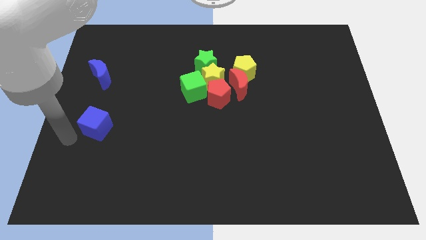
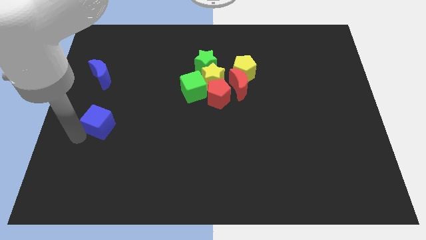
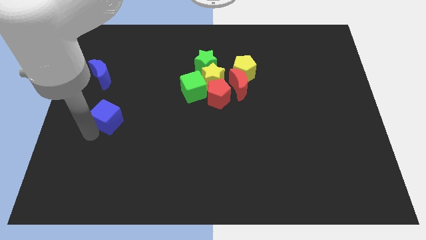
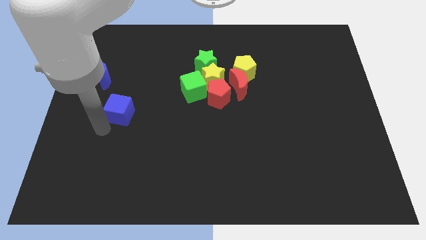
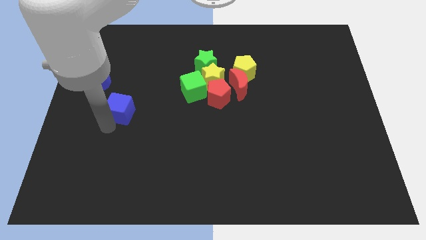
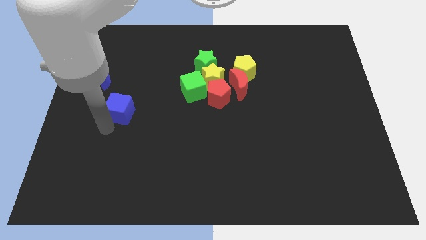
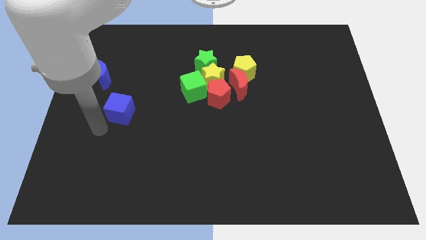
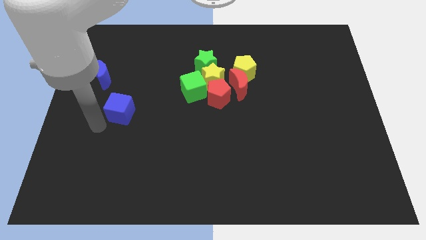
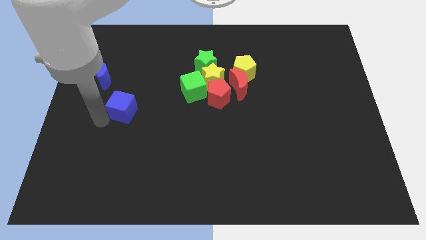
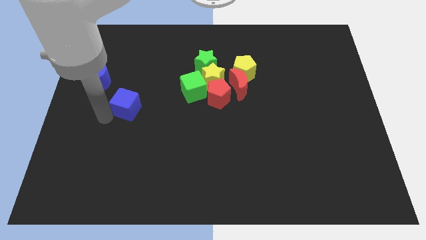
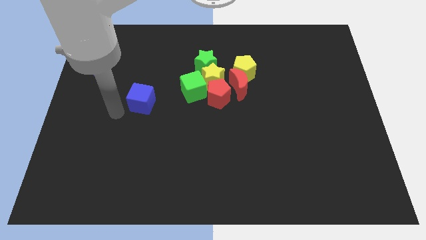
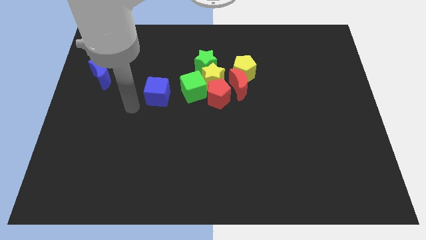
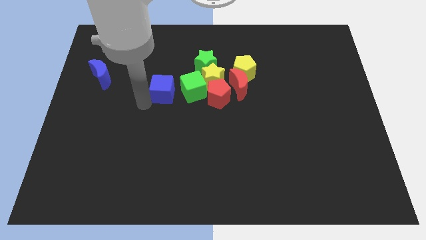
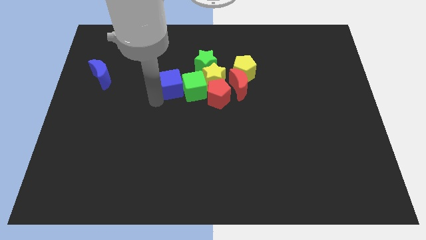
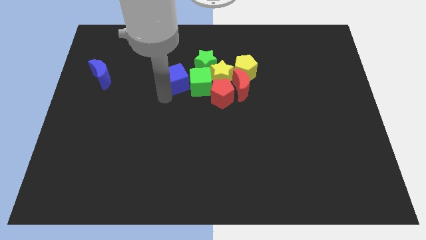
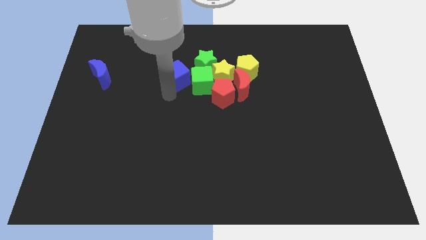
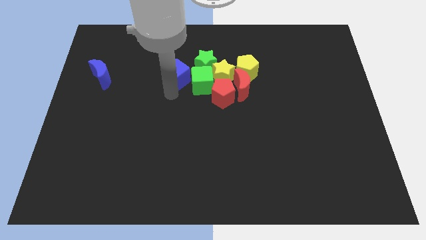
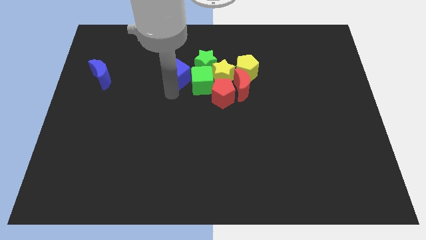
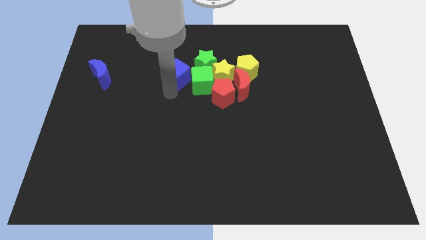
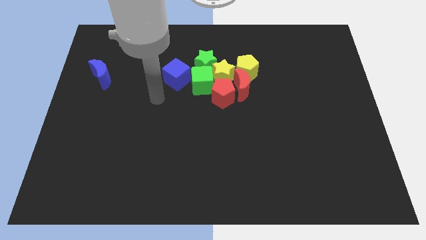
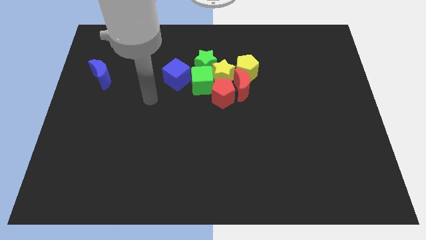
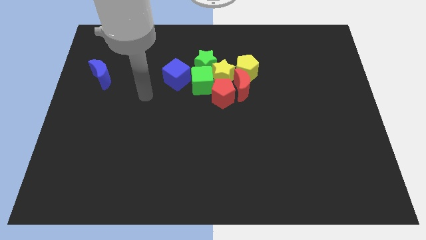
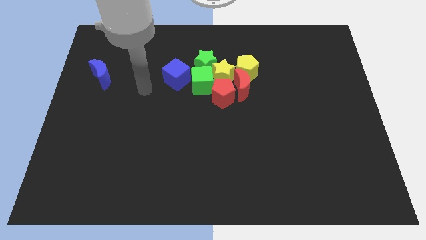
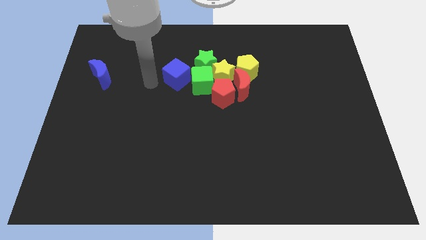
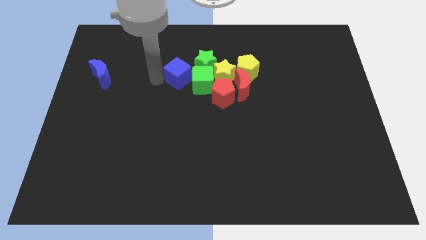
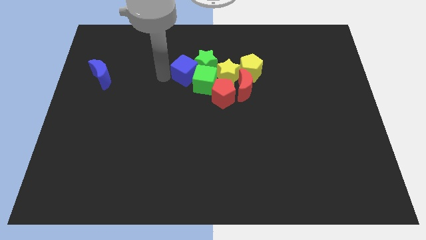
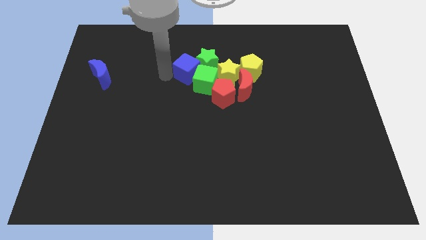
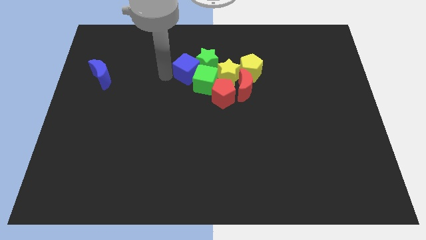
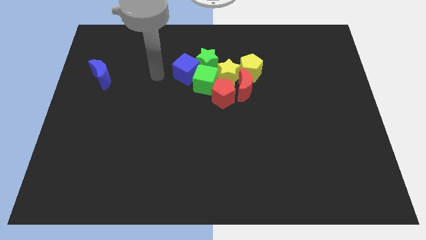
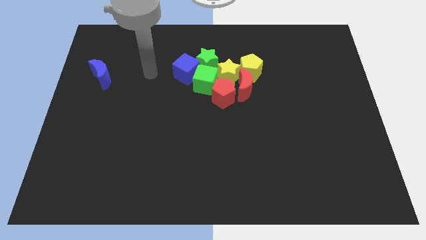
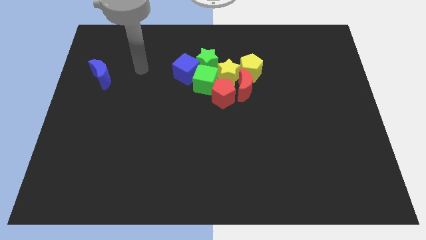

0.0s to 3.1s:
place the blue cube to the left of the green cube

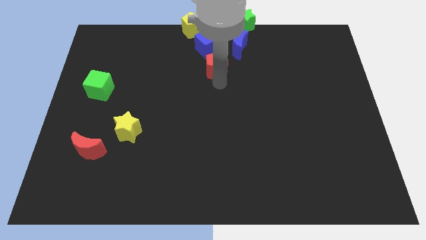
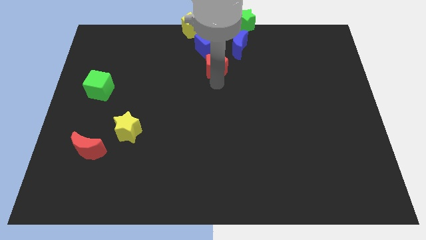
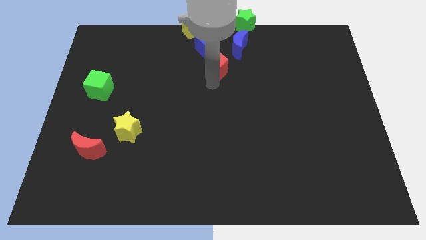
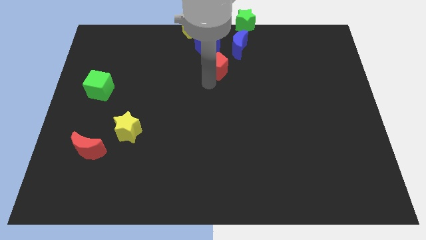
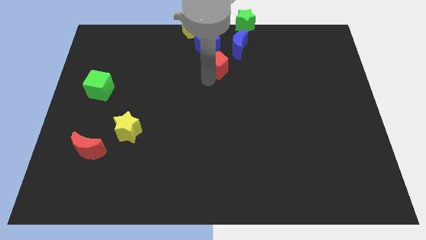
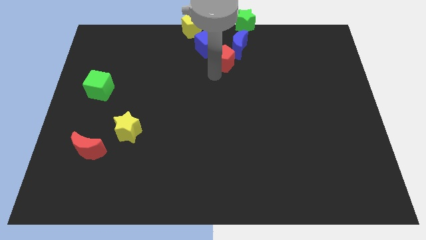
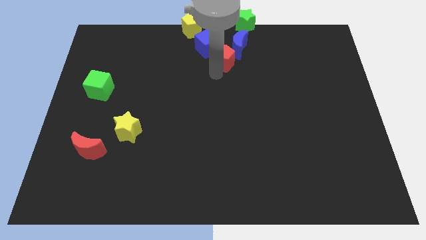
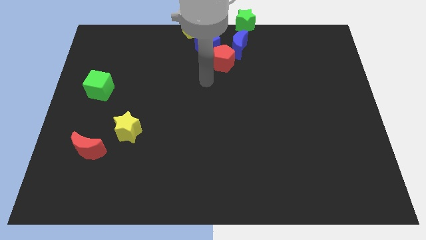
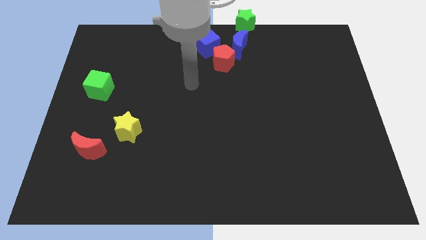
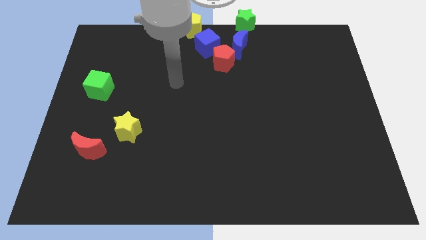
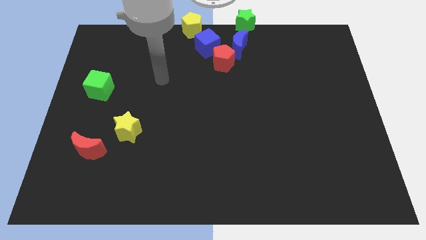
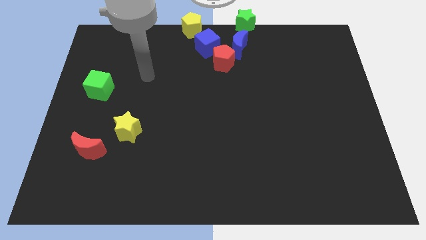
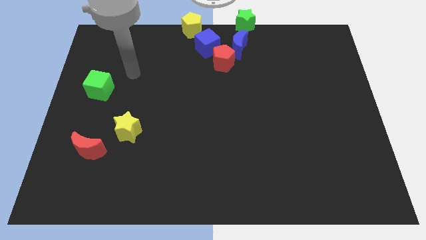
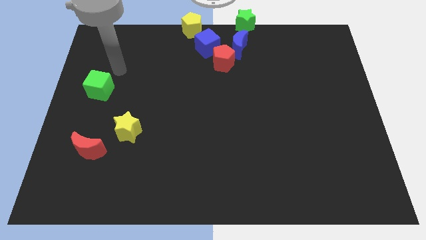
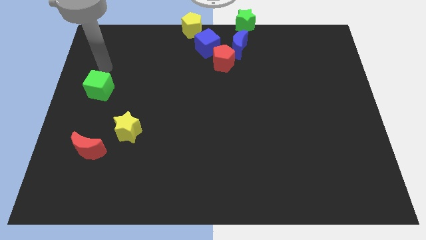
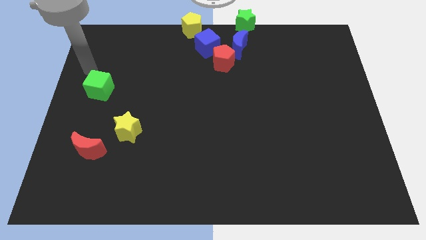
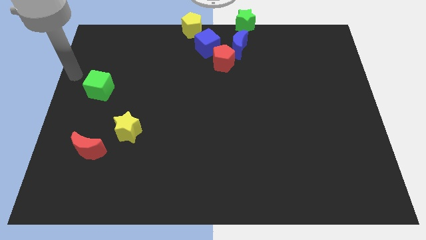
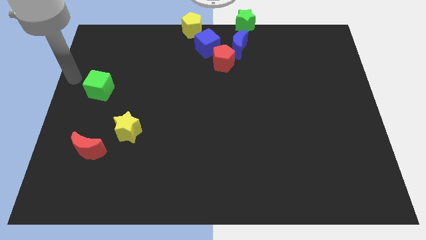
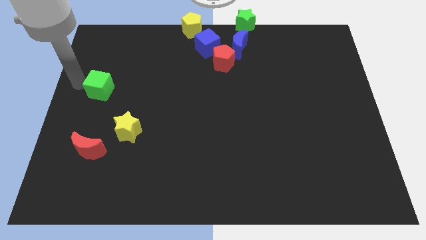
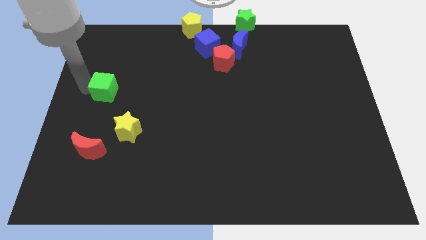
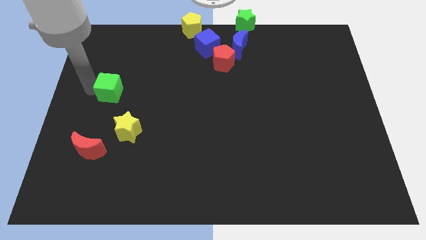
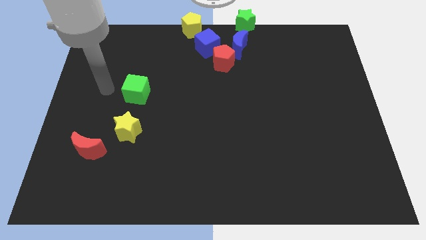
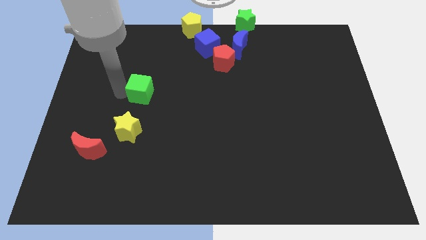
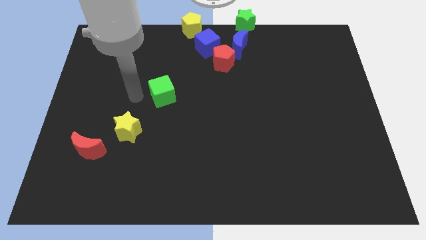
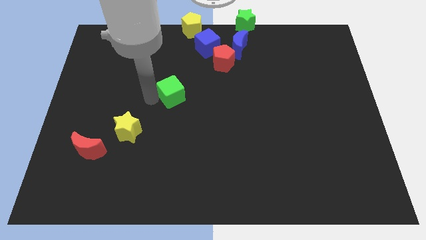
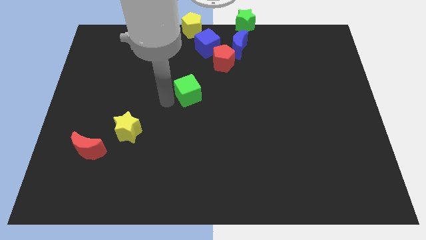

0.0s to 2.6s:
move the green cube diagonal to the red pentagon

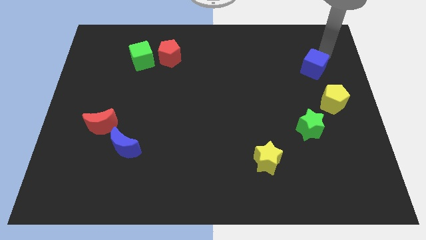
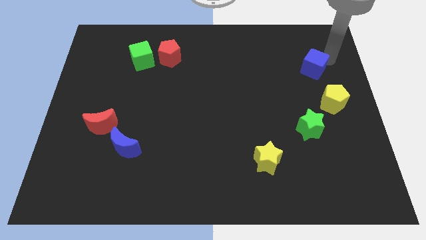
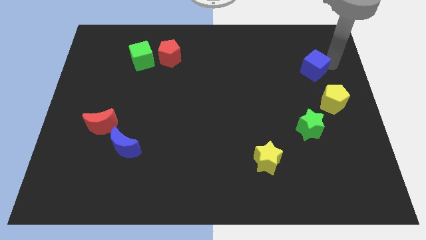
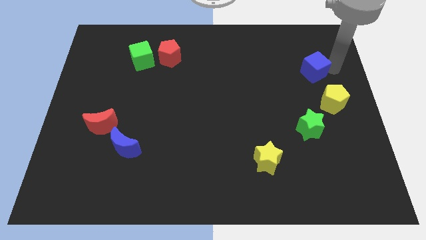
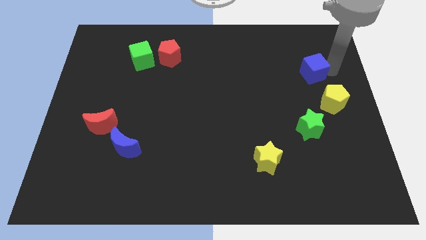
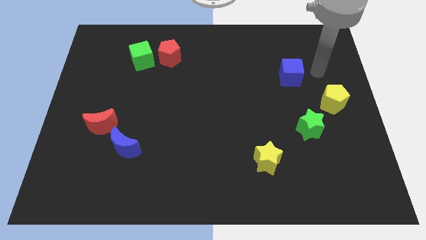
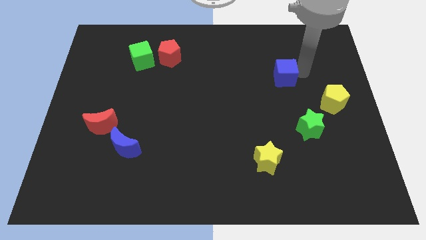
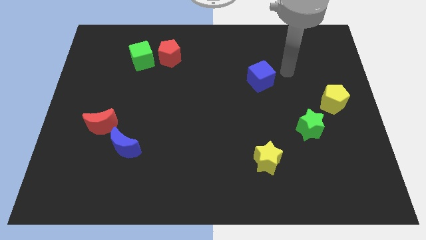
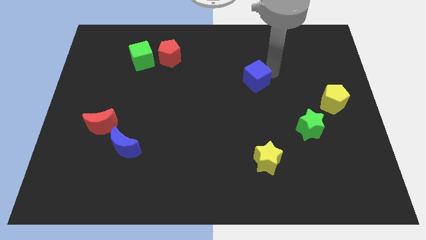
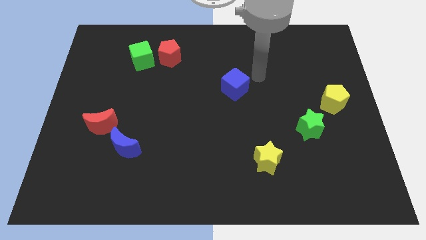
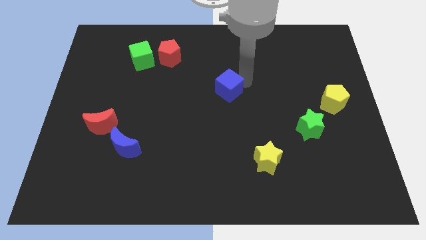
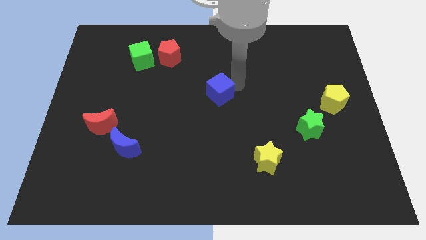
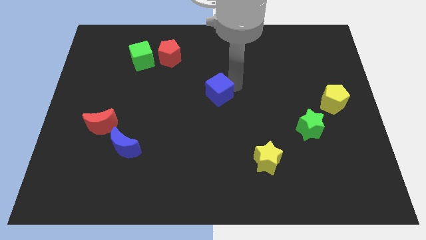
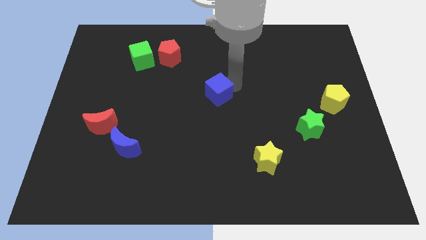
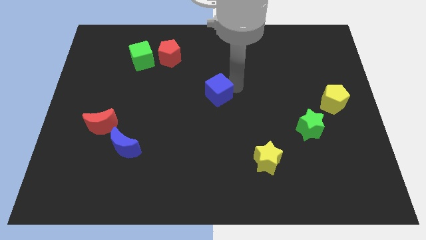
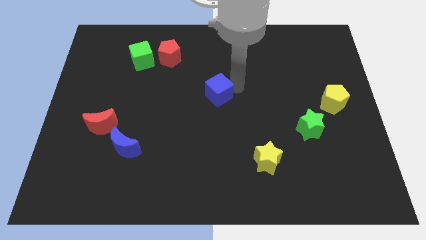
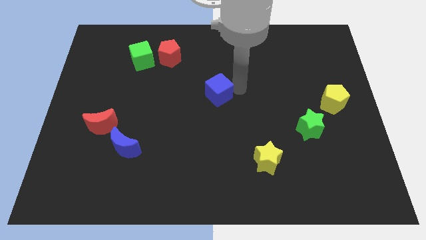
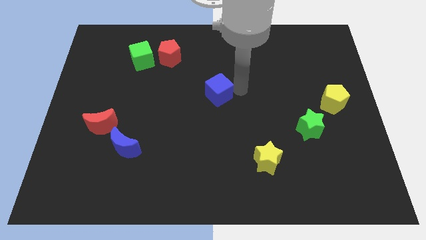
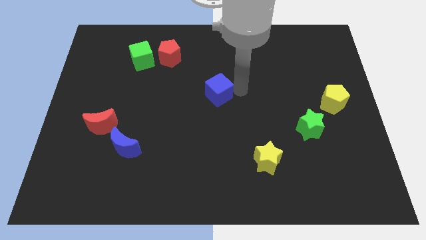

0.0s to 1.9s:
move the blue cube to the centre of the board

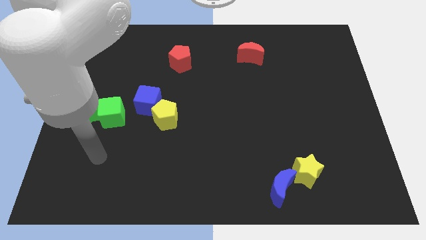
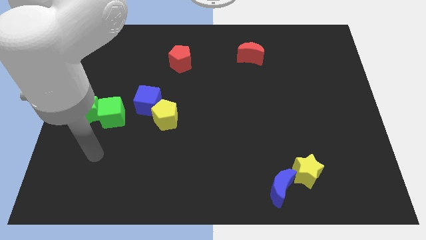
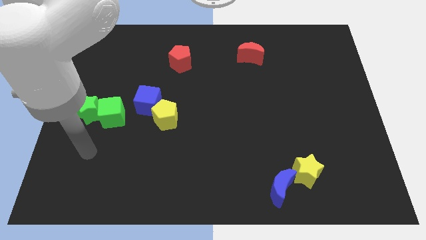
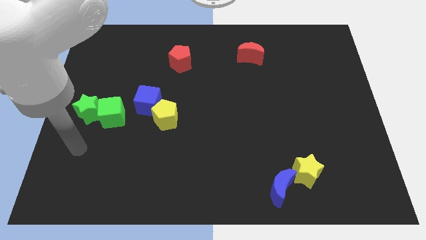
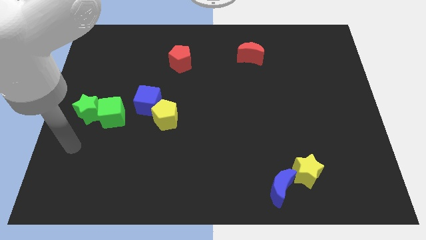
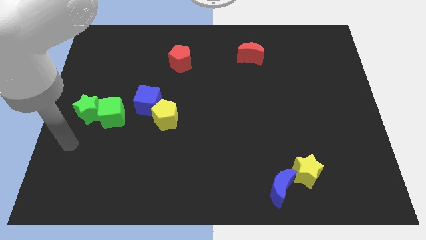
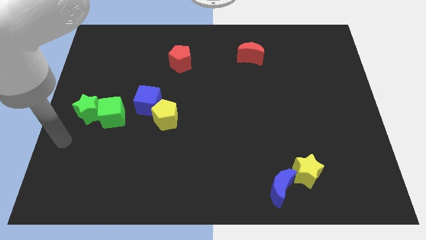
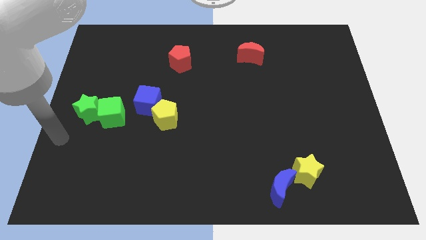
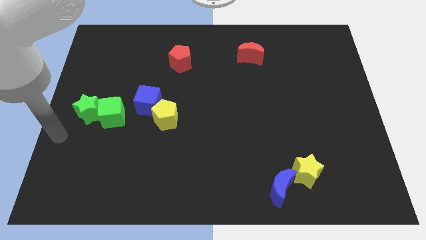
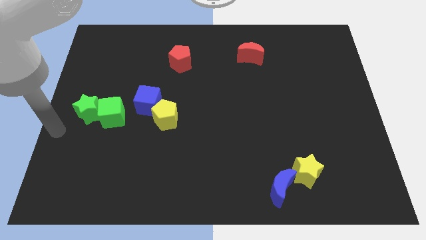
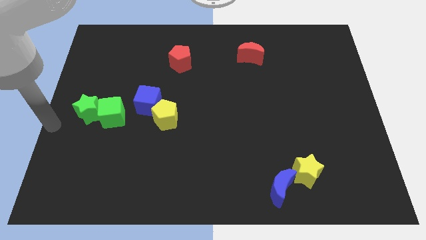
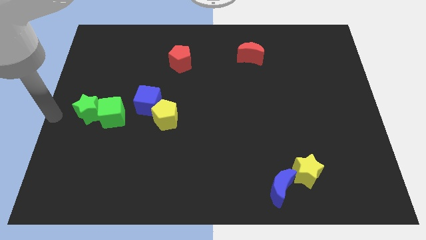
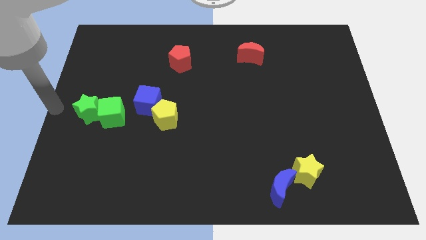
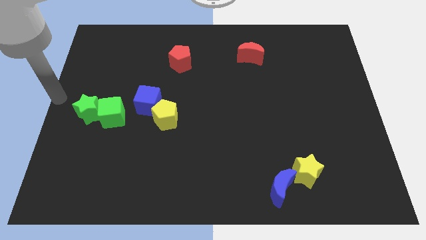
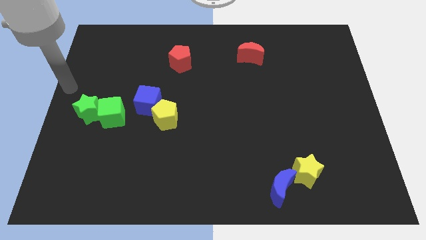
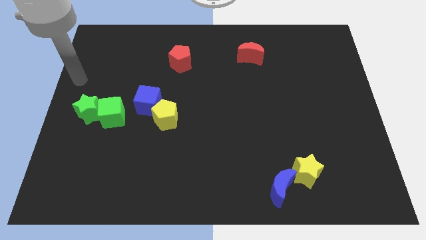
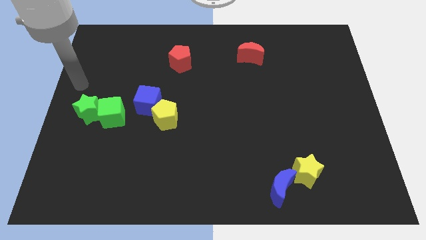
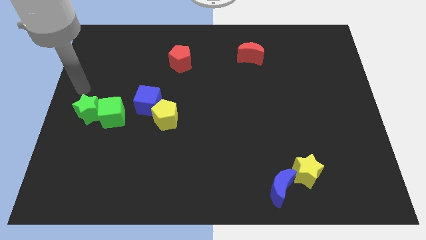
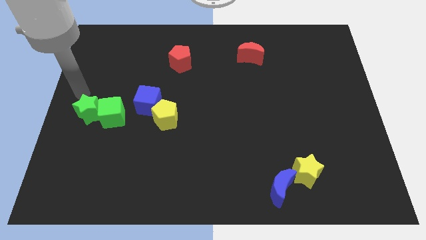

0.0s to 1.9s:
point the arm above the green star
